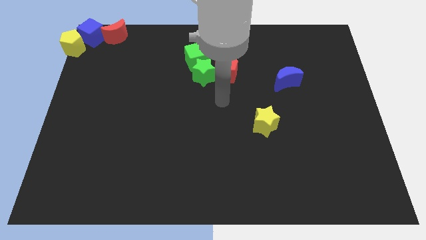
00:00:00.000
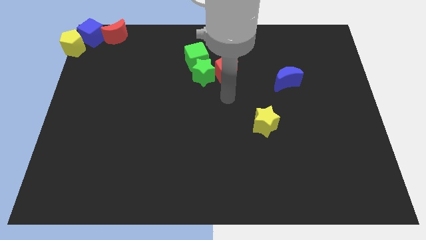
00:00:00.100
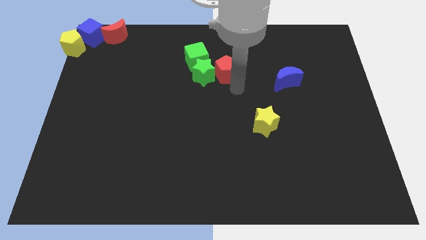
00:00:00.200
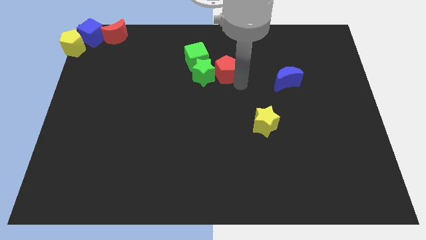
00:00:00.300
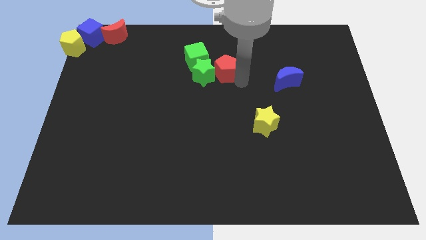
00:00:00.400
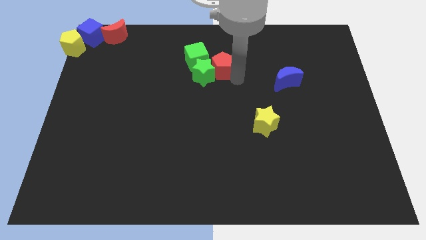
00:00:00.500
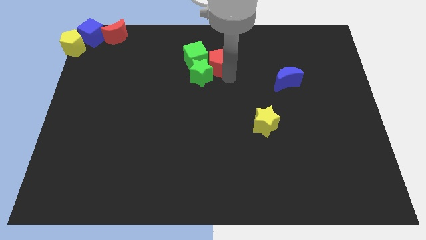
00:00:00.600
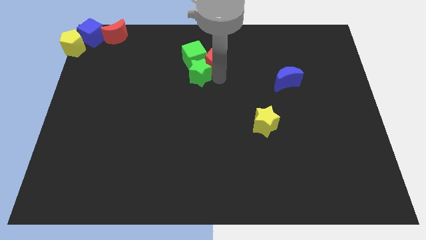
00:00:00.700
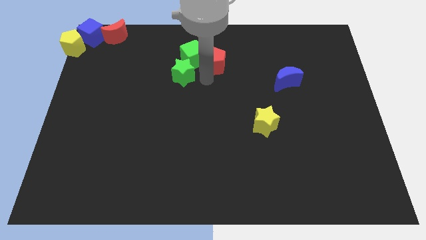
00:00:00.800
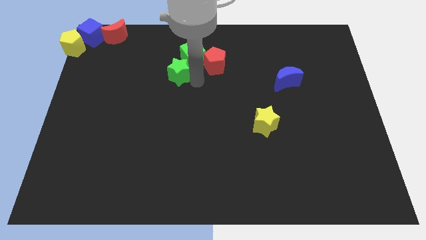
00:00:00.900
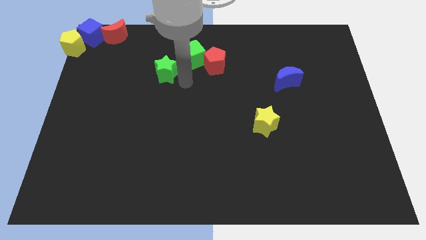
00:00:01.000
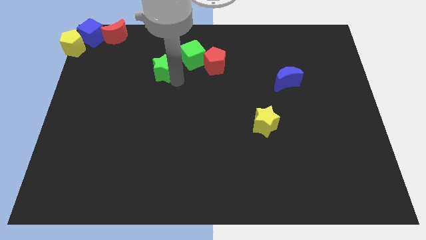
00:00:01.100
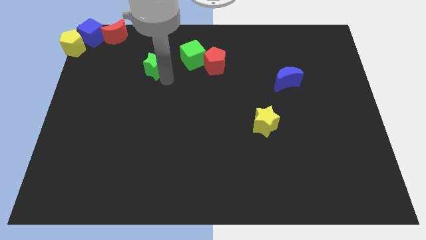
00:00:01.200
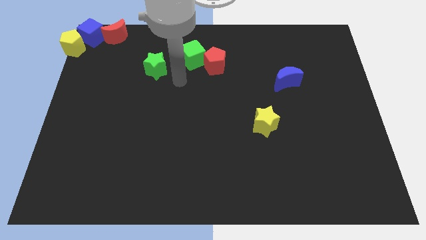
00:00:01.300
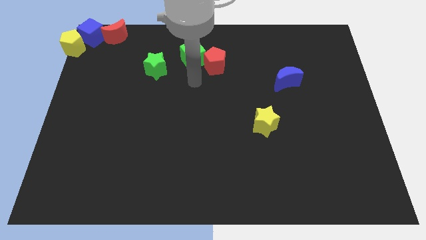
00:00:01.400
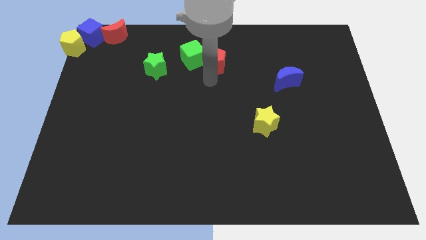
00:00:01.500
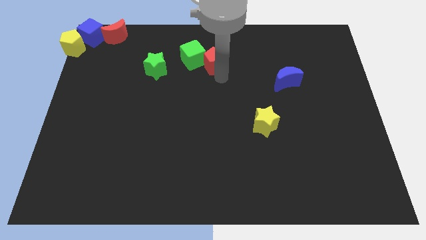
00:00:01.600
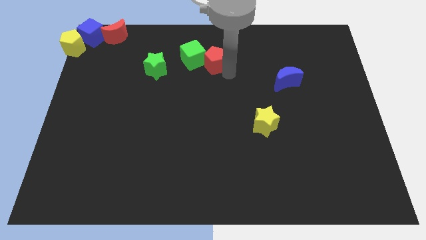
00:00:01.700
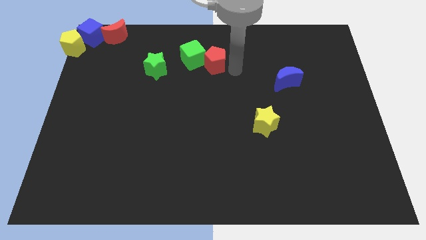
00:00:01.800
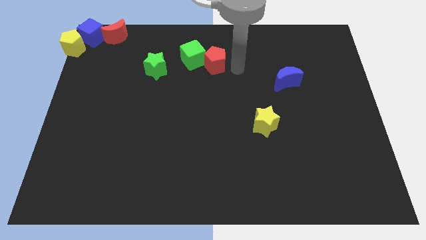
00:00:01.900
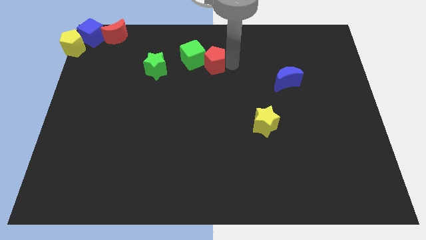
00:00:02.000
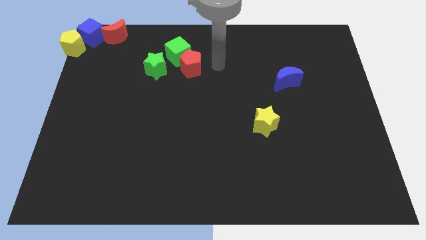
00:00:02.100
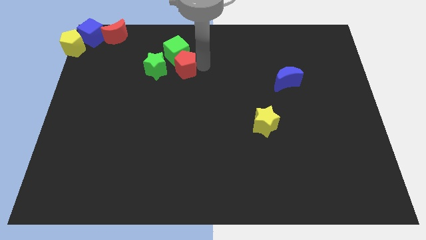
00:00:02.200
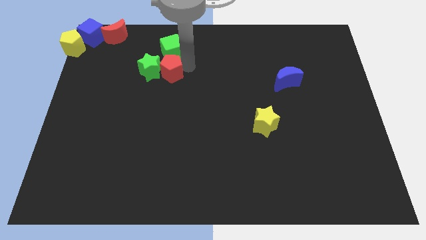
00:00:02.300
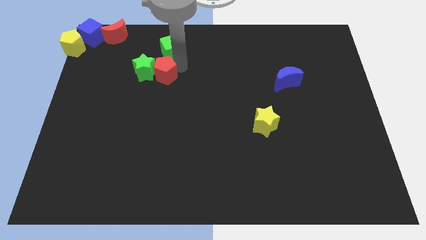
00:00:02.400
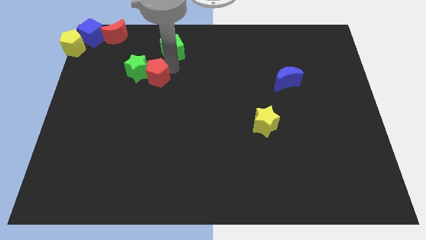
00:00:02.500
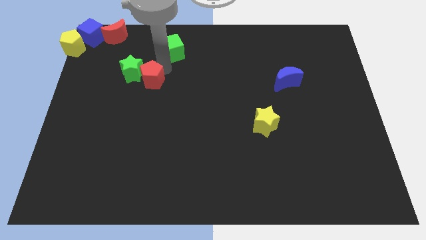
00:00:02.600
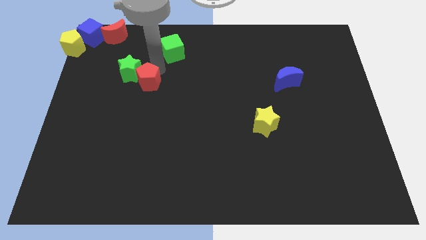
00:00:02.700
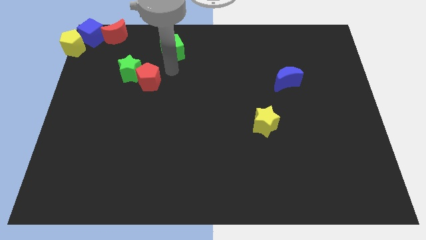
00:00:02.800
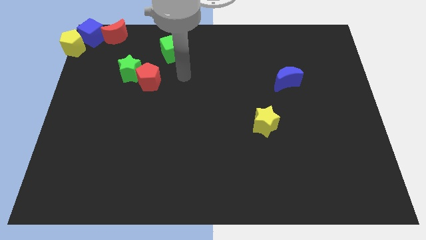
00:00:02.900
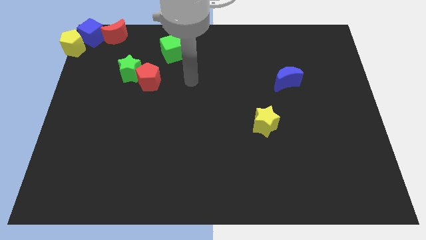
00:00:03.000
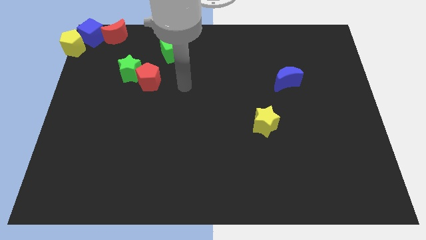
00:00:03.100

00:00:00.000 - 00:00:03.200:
separate the green blocks

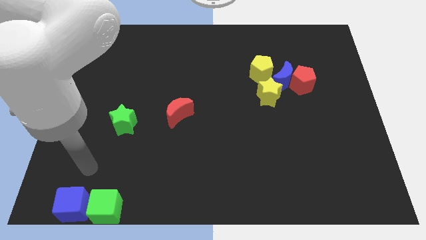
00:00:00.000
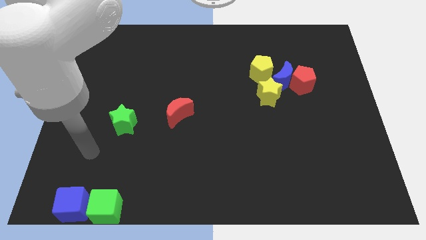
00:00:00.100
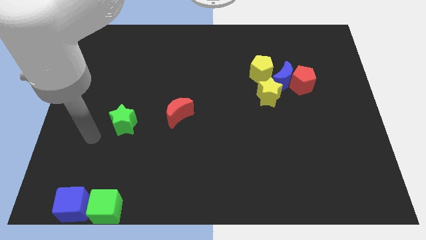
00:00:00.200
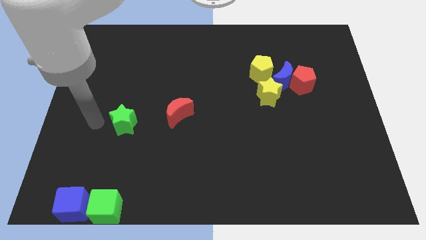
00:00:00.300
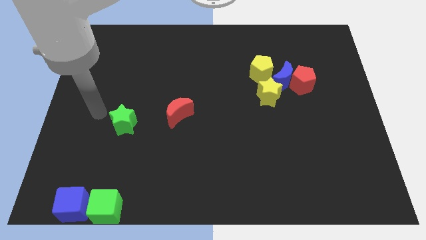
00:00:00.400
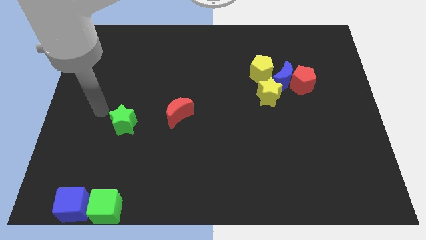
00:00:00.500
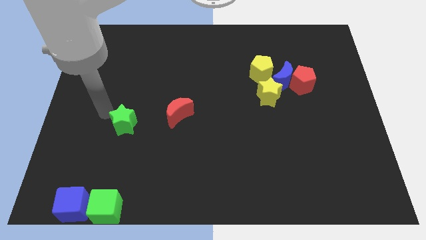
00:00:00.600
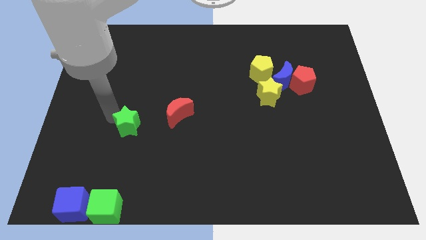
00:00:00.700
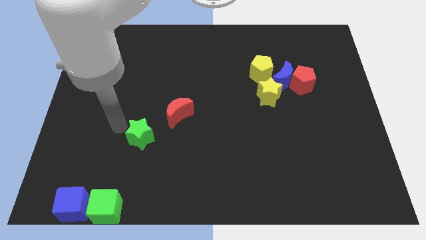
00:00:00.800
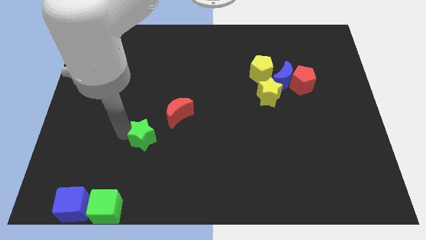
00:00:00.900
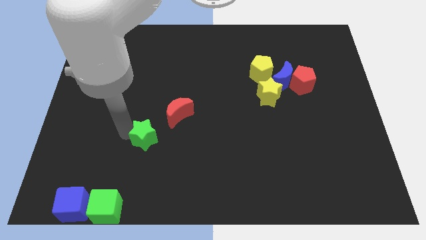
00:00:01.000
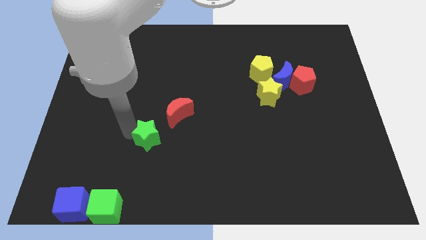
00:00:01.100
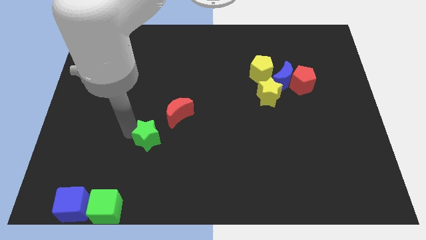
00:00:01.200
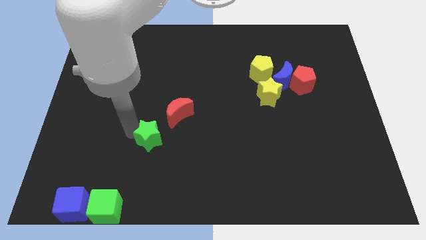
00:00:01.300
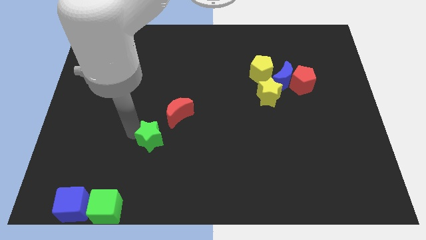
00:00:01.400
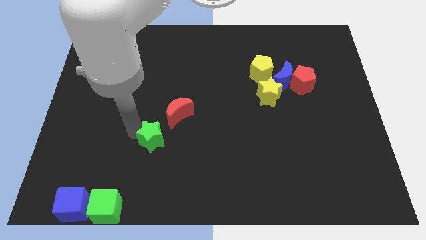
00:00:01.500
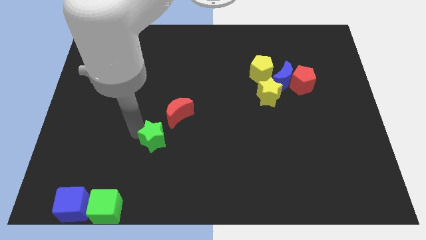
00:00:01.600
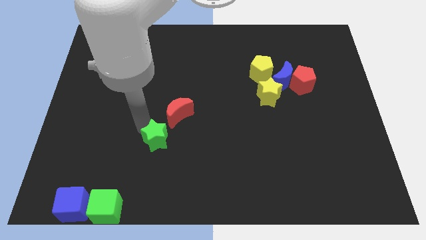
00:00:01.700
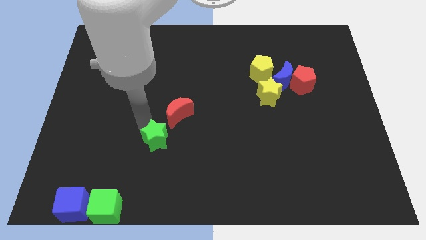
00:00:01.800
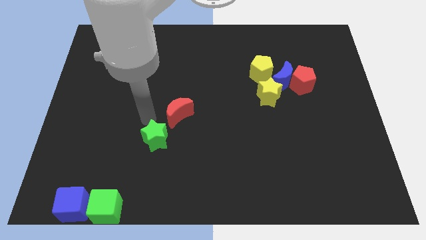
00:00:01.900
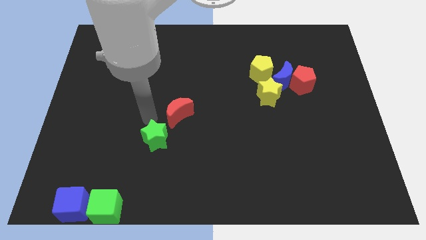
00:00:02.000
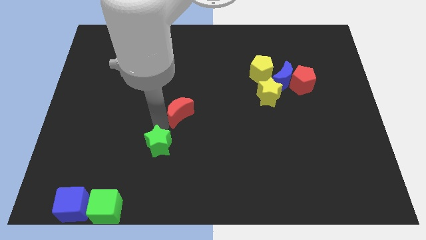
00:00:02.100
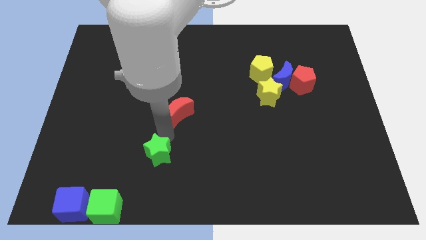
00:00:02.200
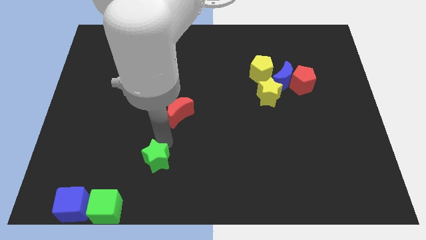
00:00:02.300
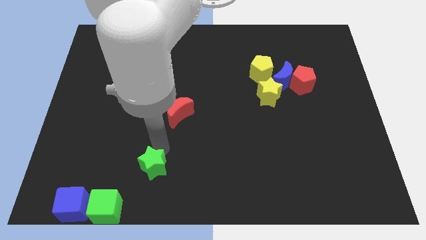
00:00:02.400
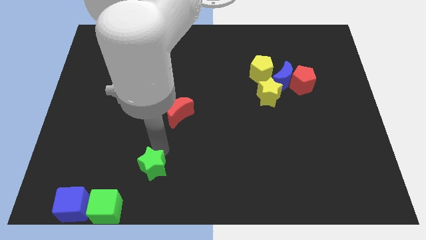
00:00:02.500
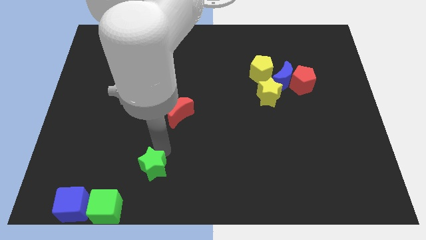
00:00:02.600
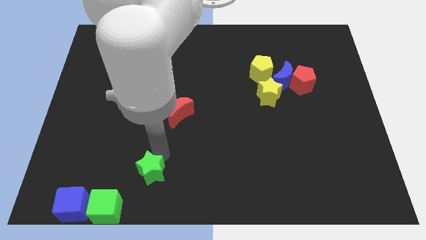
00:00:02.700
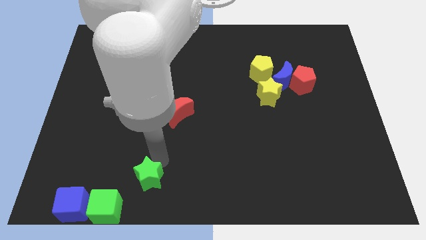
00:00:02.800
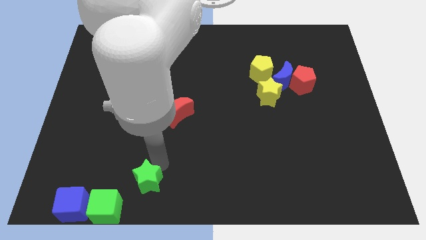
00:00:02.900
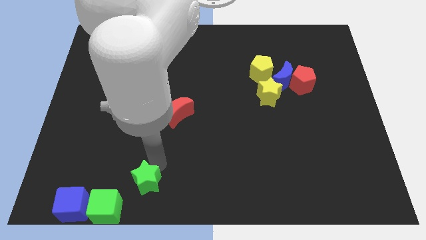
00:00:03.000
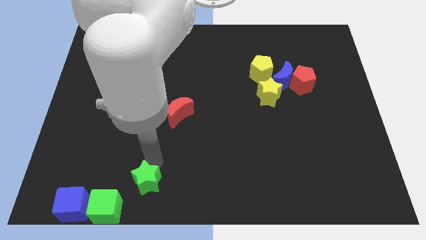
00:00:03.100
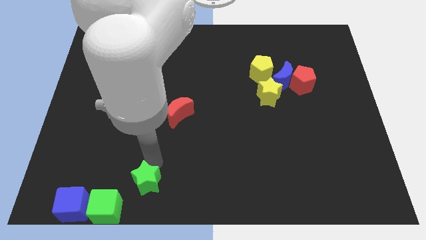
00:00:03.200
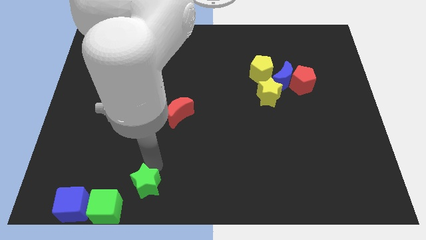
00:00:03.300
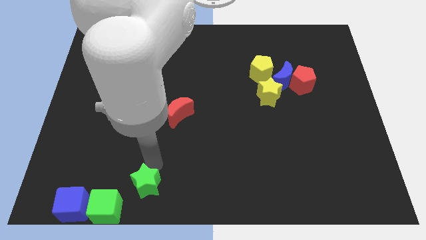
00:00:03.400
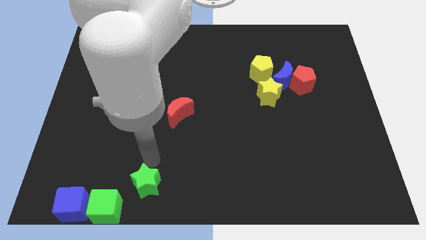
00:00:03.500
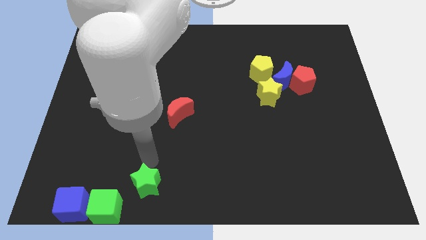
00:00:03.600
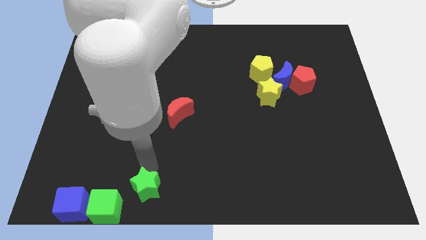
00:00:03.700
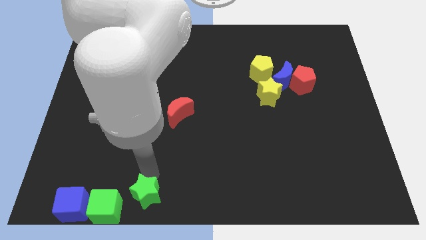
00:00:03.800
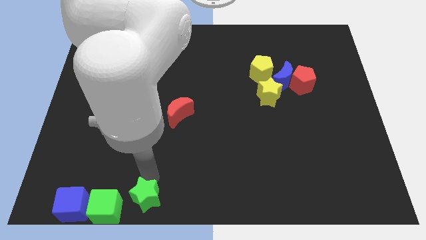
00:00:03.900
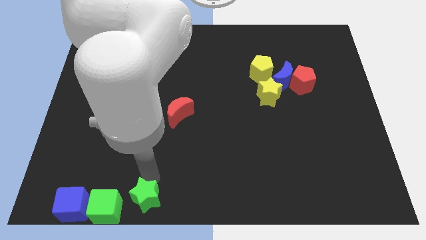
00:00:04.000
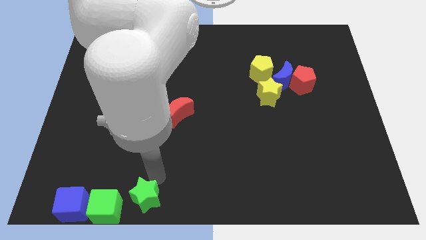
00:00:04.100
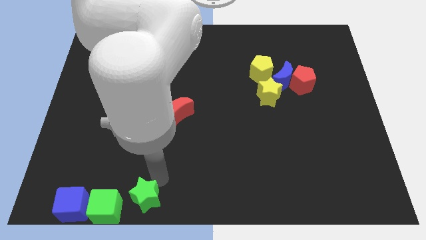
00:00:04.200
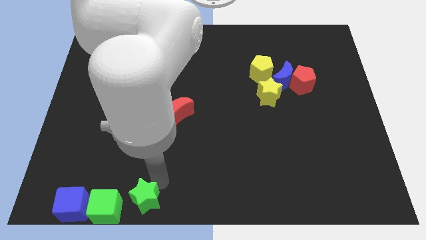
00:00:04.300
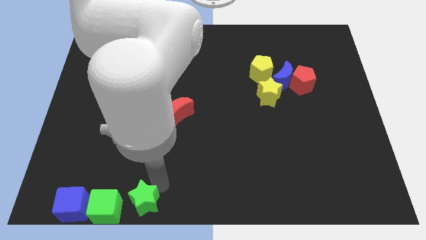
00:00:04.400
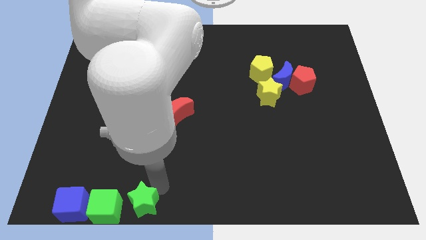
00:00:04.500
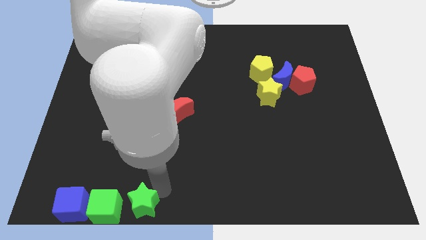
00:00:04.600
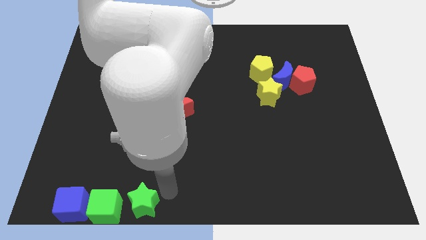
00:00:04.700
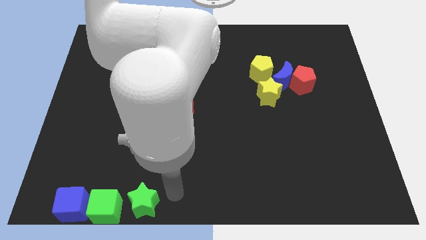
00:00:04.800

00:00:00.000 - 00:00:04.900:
move the green star to the right of the green cube

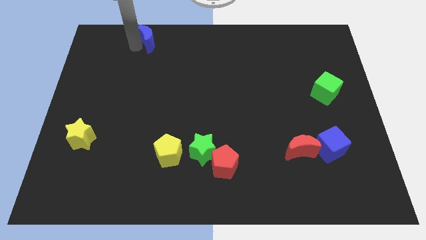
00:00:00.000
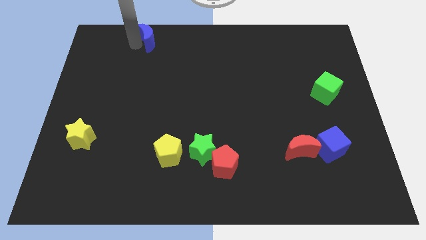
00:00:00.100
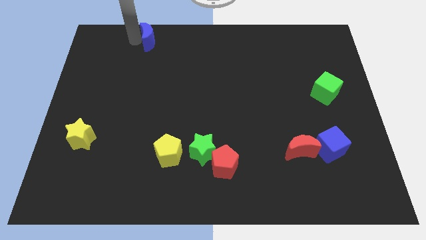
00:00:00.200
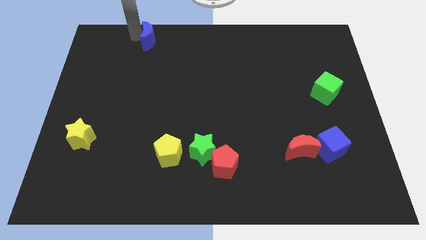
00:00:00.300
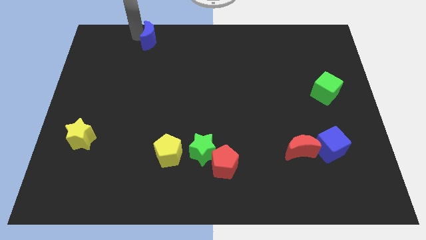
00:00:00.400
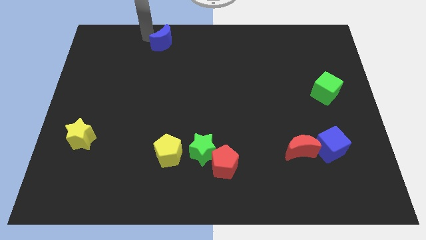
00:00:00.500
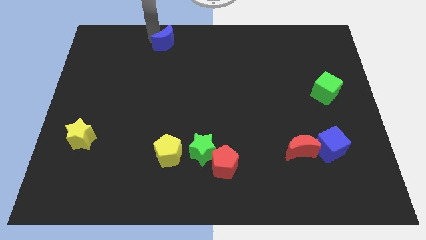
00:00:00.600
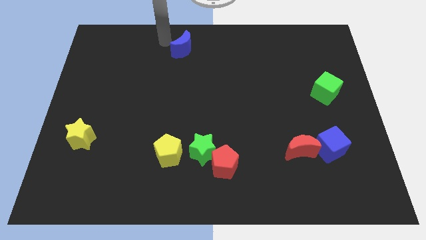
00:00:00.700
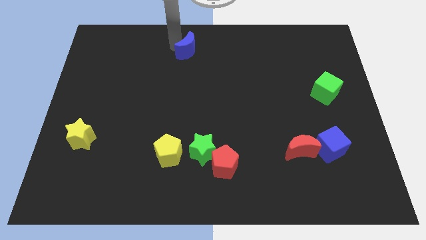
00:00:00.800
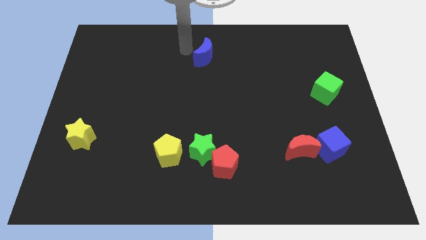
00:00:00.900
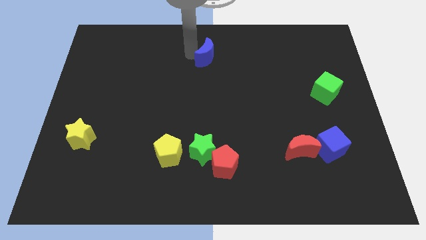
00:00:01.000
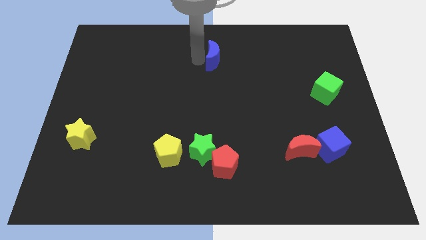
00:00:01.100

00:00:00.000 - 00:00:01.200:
push the blue moon towards the right side of the board
